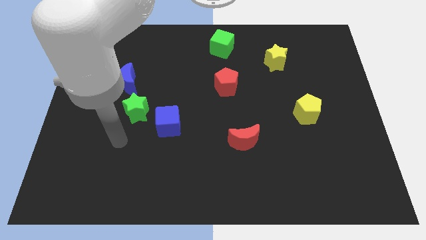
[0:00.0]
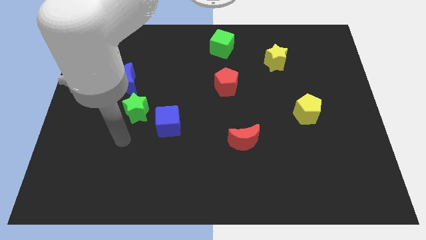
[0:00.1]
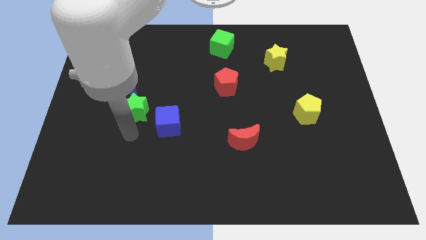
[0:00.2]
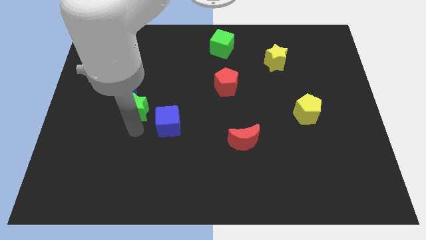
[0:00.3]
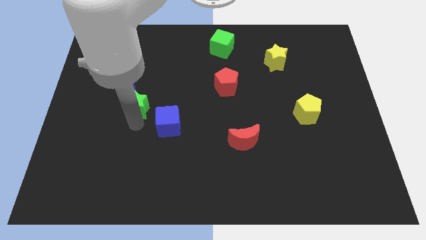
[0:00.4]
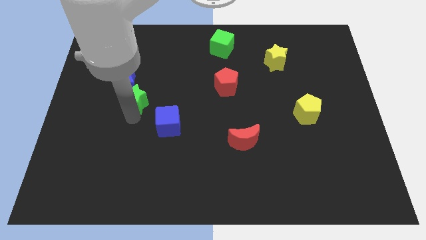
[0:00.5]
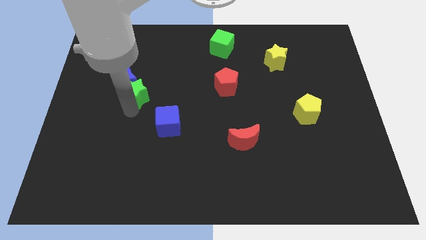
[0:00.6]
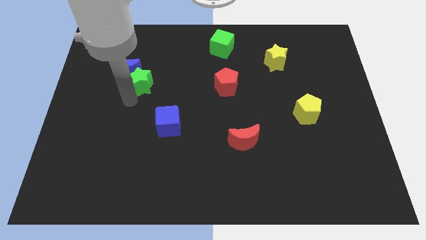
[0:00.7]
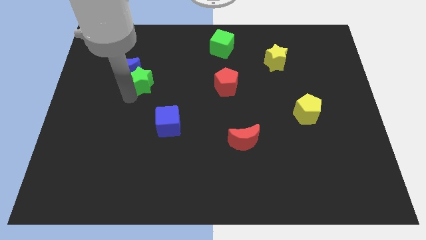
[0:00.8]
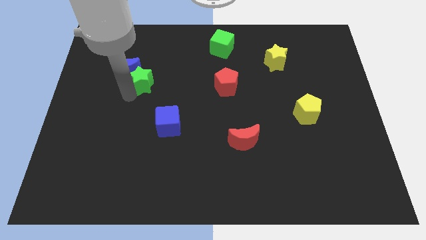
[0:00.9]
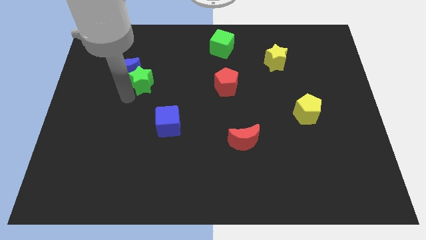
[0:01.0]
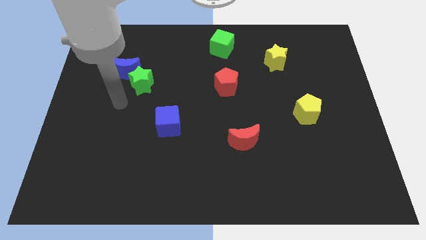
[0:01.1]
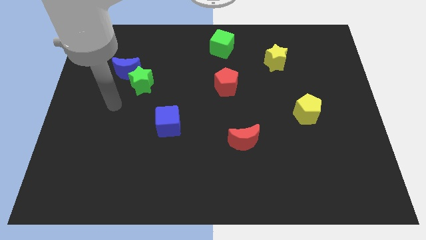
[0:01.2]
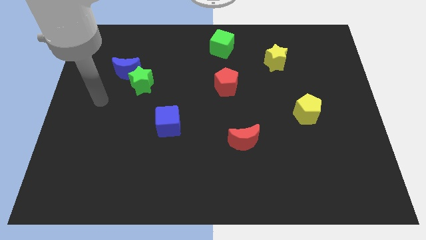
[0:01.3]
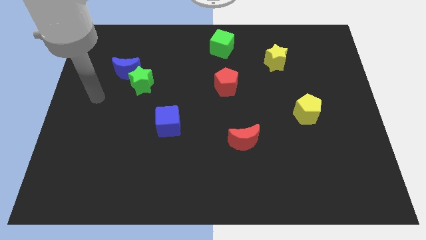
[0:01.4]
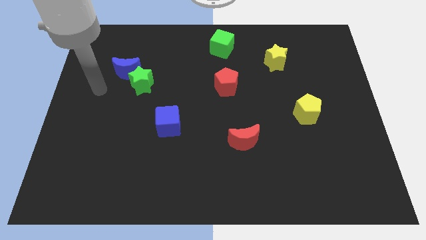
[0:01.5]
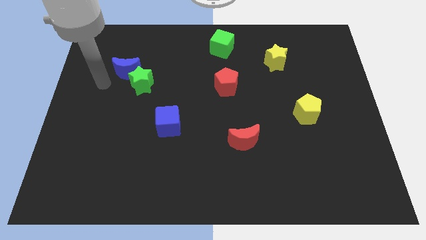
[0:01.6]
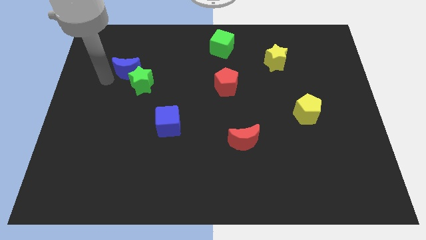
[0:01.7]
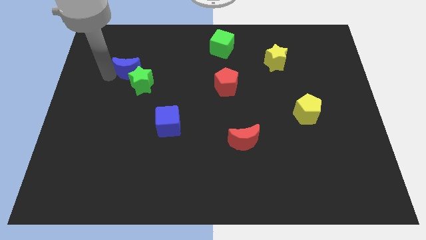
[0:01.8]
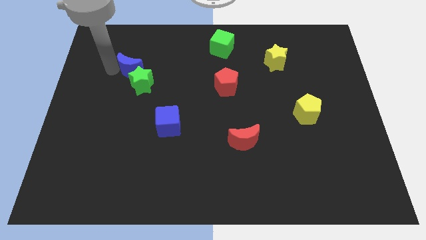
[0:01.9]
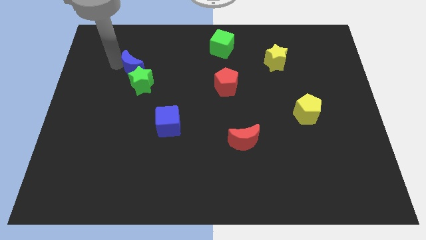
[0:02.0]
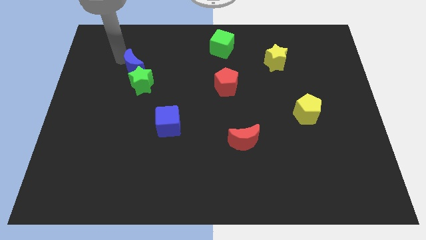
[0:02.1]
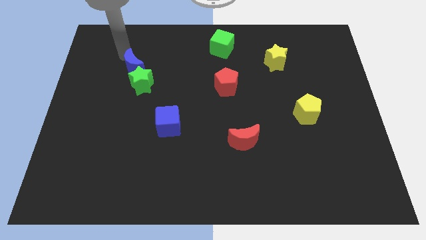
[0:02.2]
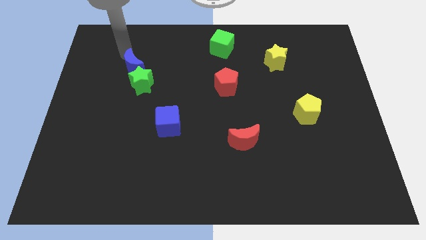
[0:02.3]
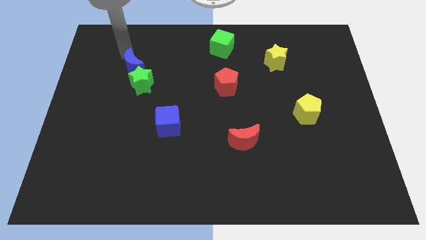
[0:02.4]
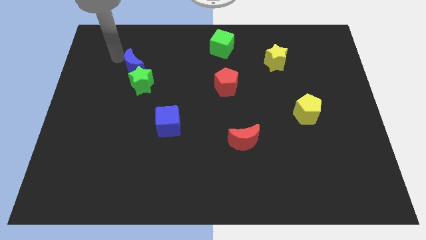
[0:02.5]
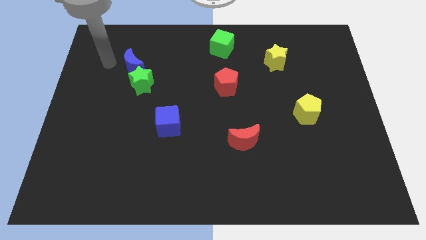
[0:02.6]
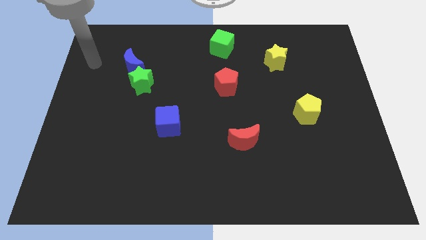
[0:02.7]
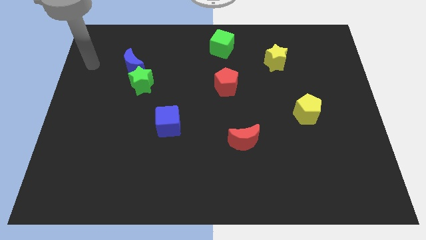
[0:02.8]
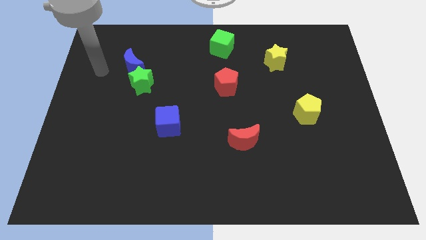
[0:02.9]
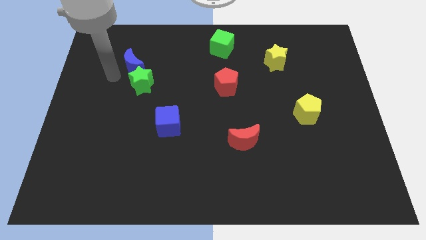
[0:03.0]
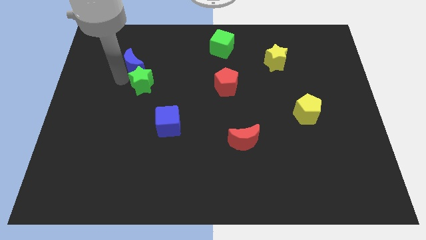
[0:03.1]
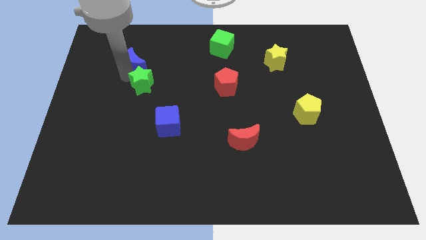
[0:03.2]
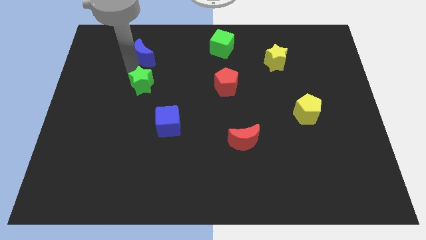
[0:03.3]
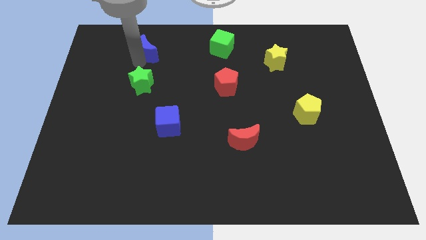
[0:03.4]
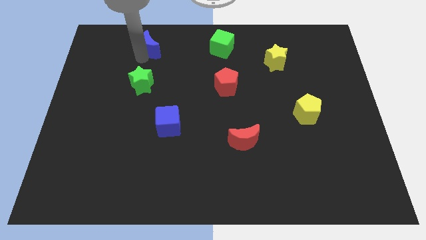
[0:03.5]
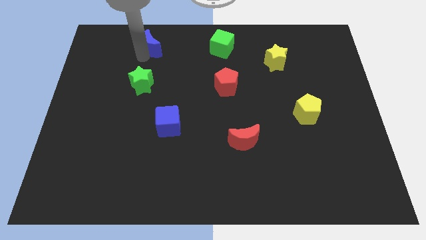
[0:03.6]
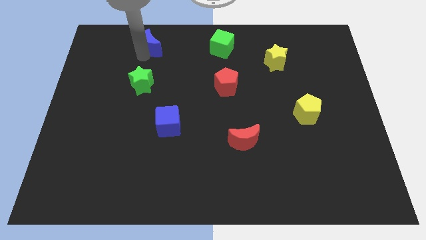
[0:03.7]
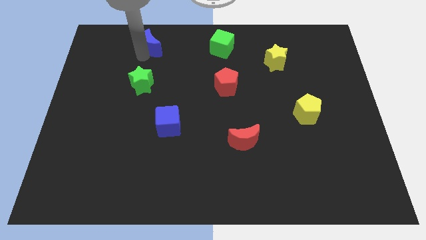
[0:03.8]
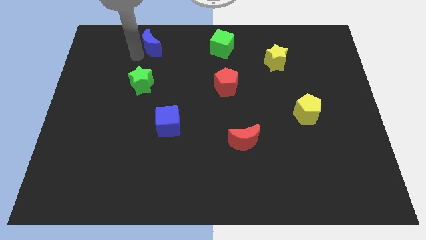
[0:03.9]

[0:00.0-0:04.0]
place green star and blue moon in a vertical line

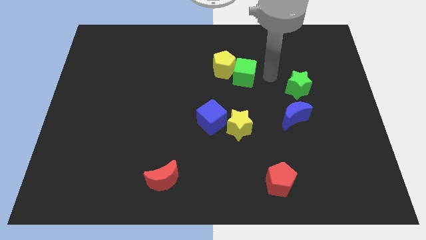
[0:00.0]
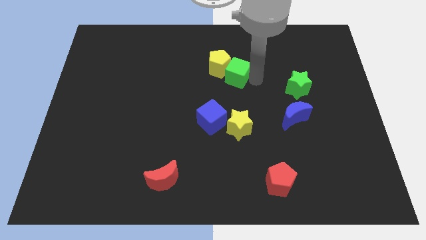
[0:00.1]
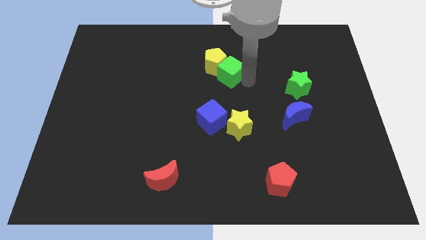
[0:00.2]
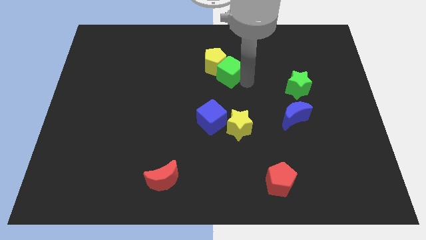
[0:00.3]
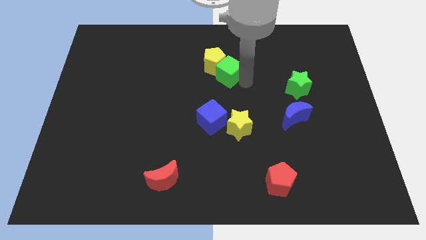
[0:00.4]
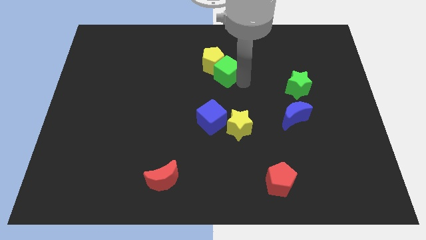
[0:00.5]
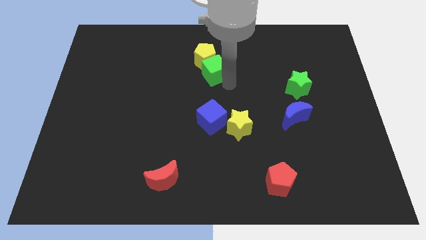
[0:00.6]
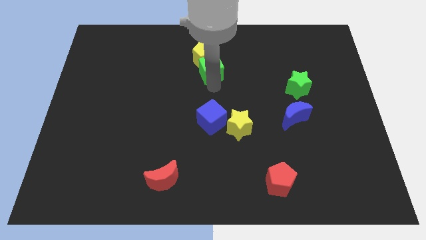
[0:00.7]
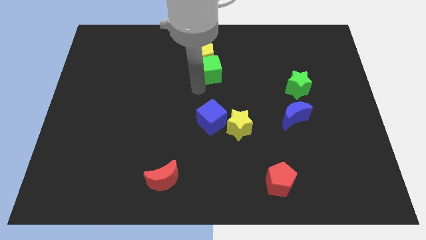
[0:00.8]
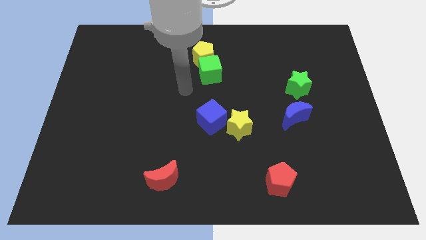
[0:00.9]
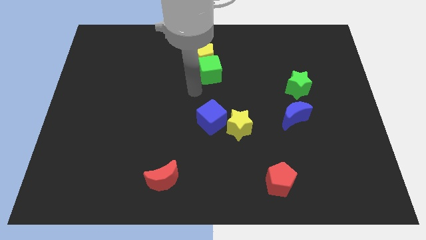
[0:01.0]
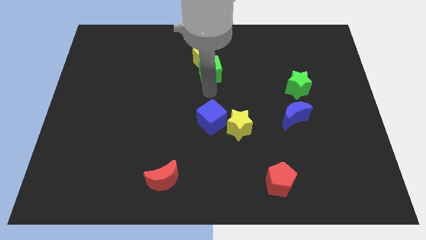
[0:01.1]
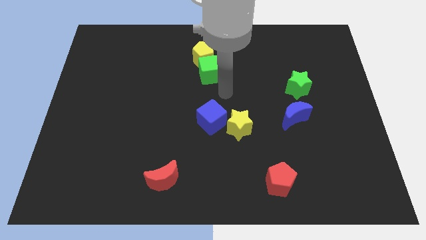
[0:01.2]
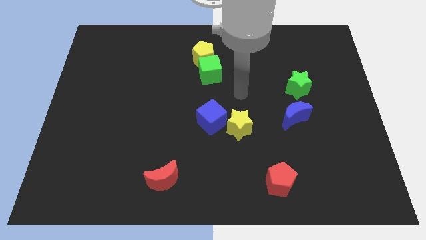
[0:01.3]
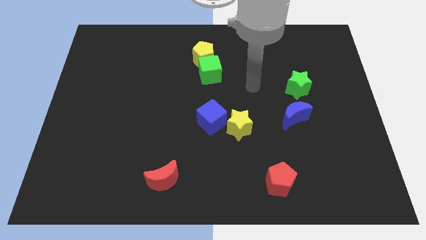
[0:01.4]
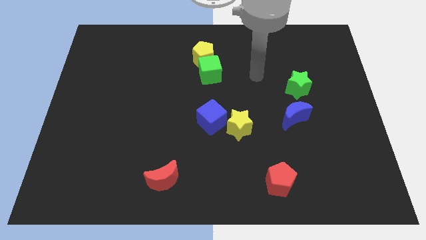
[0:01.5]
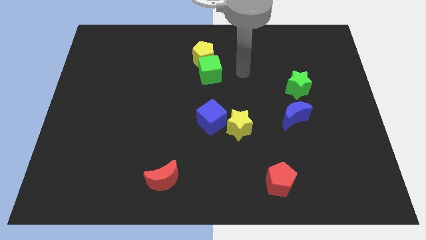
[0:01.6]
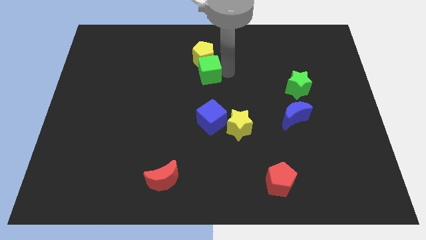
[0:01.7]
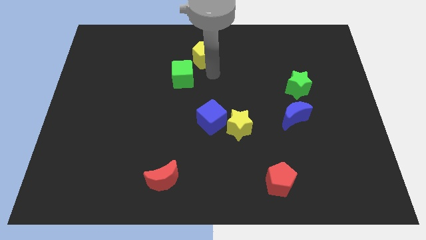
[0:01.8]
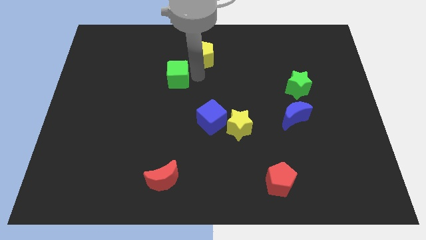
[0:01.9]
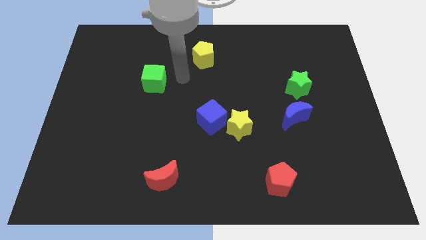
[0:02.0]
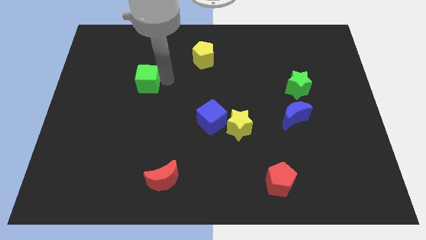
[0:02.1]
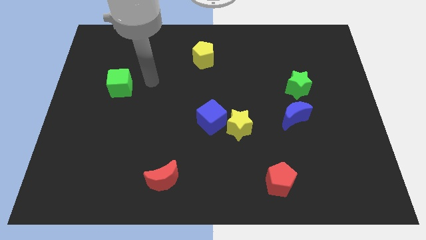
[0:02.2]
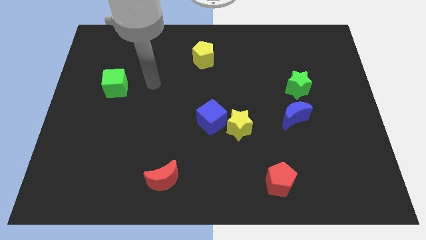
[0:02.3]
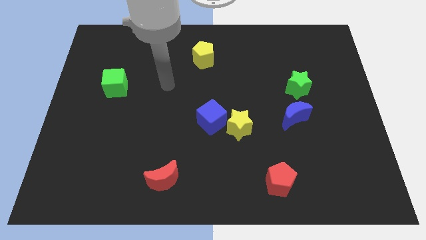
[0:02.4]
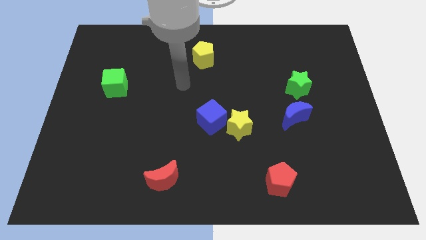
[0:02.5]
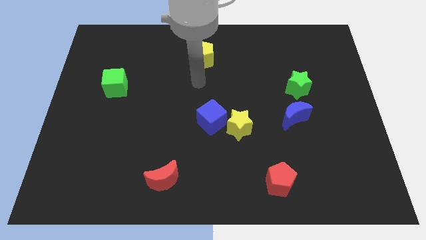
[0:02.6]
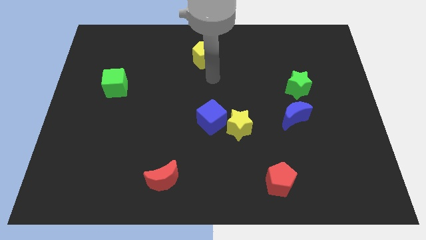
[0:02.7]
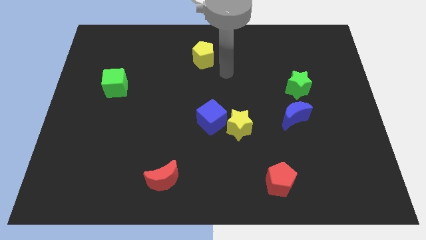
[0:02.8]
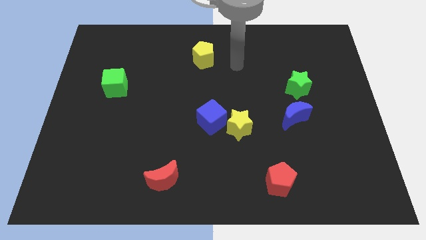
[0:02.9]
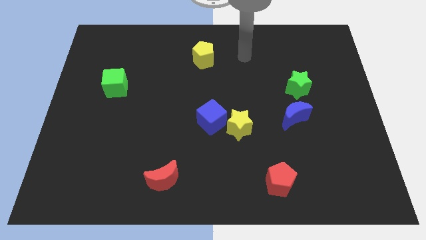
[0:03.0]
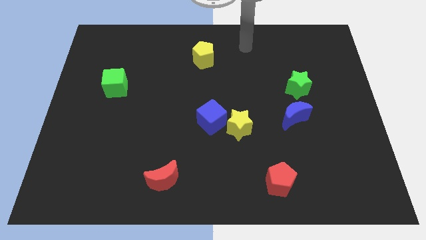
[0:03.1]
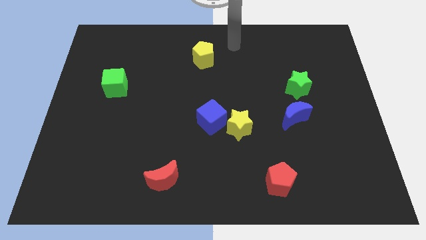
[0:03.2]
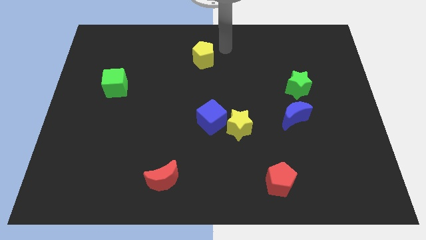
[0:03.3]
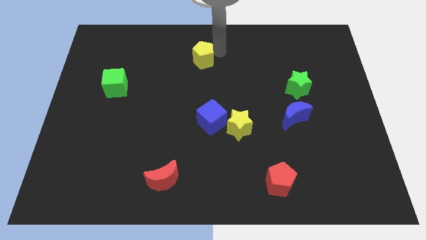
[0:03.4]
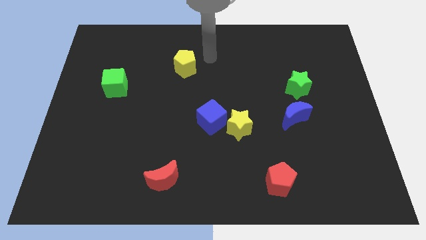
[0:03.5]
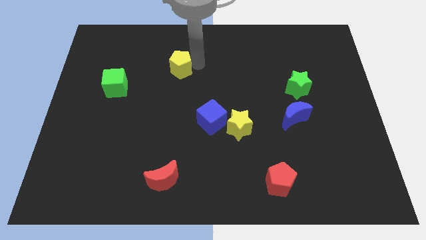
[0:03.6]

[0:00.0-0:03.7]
push the green cube away from the yellow pentagon

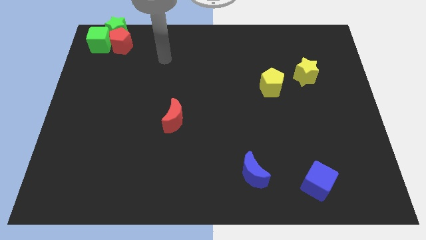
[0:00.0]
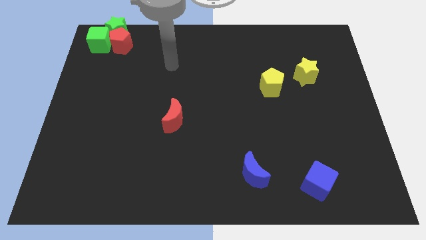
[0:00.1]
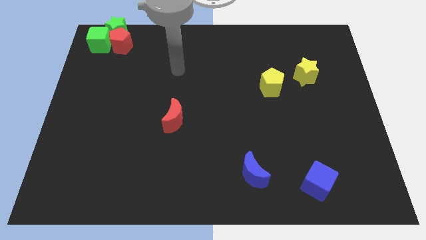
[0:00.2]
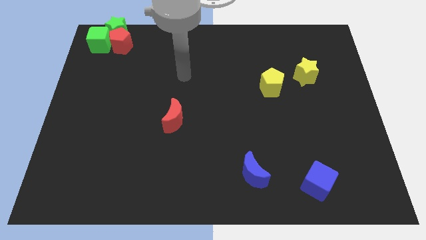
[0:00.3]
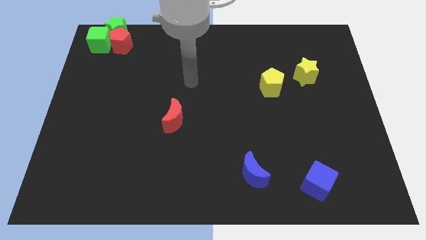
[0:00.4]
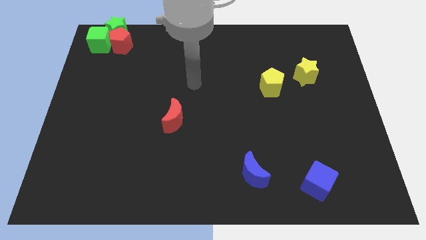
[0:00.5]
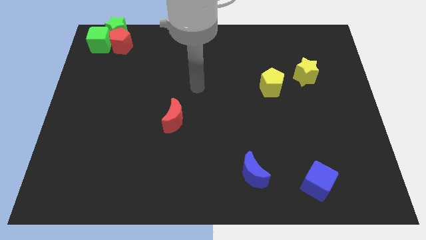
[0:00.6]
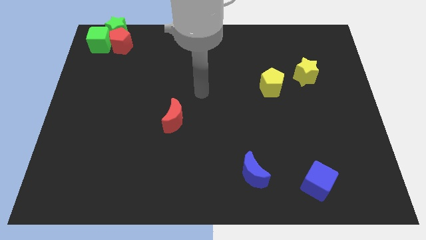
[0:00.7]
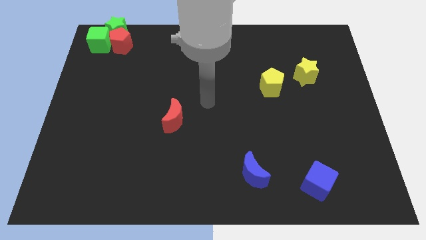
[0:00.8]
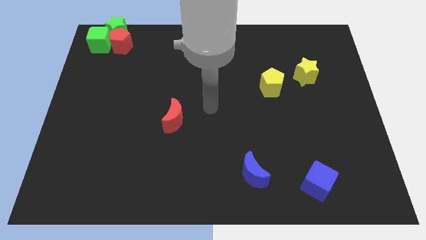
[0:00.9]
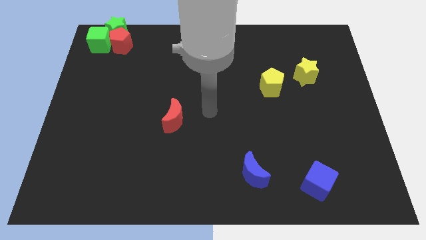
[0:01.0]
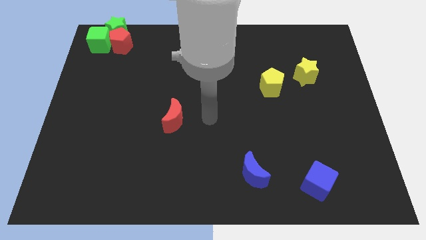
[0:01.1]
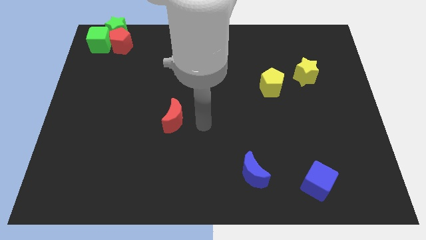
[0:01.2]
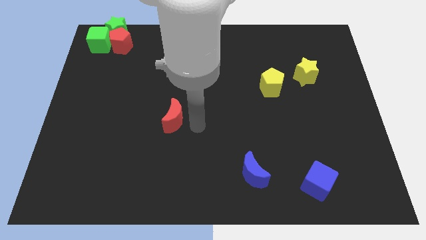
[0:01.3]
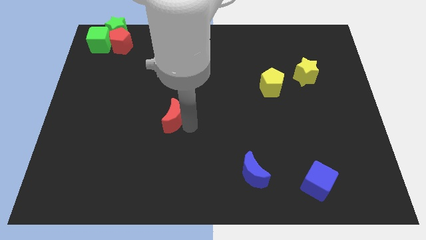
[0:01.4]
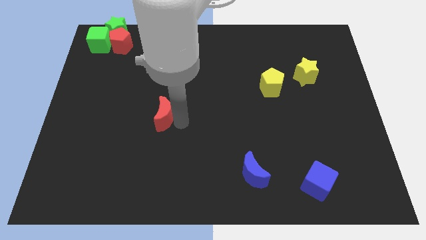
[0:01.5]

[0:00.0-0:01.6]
move your arm towards the red moon
